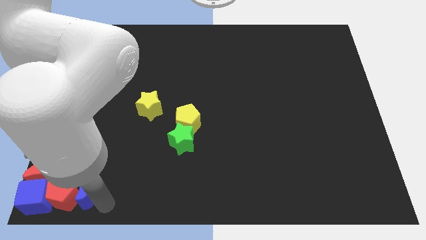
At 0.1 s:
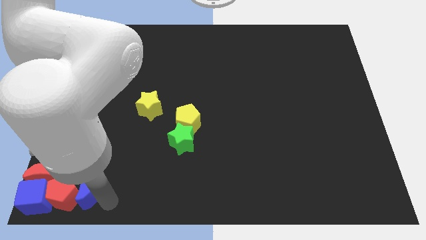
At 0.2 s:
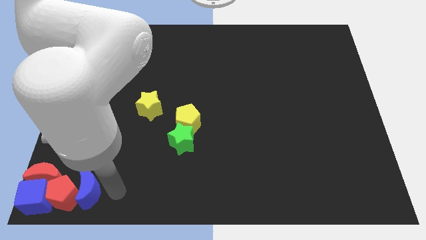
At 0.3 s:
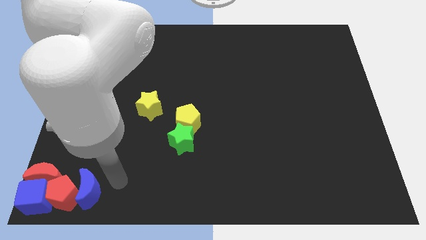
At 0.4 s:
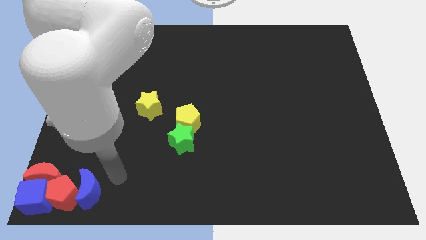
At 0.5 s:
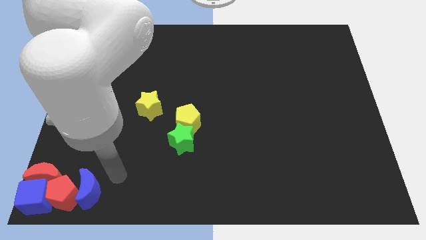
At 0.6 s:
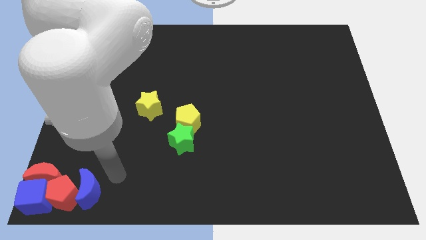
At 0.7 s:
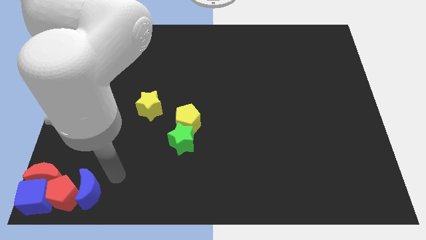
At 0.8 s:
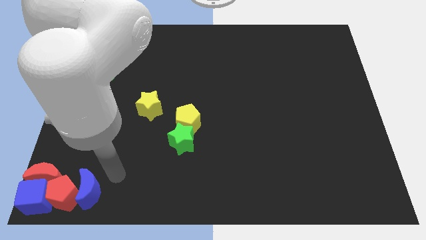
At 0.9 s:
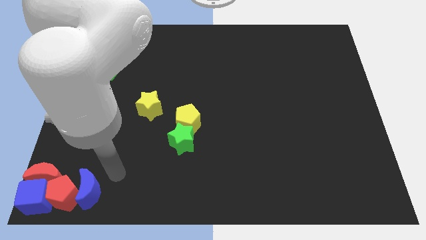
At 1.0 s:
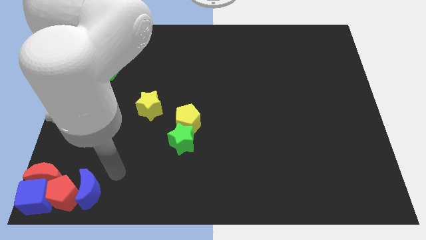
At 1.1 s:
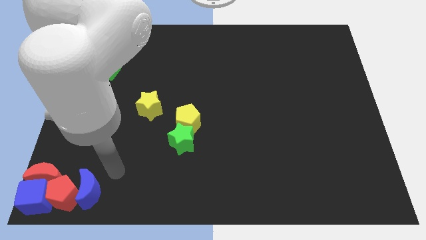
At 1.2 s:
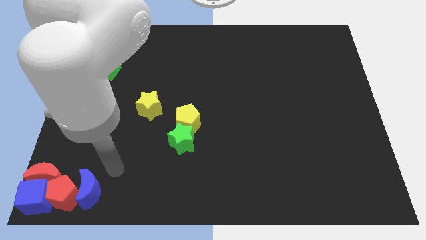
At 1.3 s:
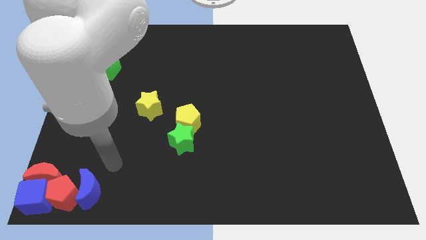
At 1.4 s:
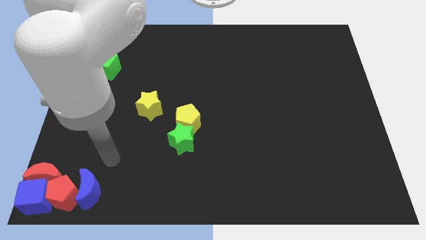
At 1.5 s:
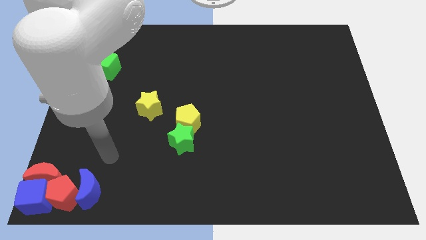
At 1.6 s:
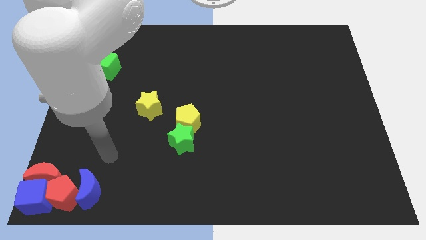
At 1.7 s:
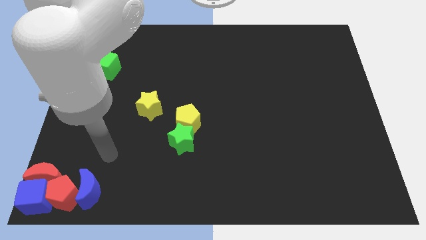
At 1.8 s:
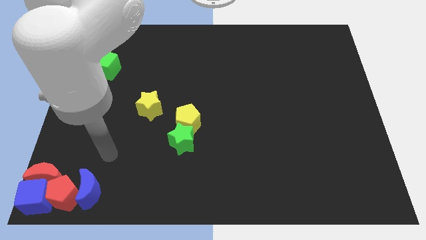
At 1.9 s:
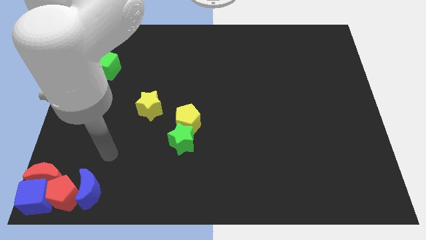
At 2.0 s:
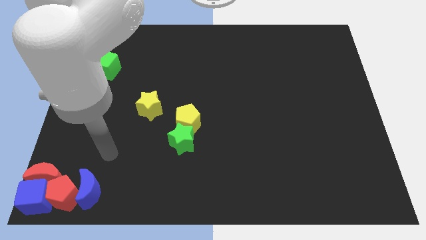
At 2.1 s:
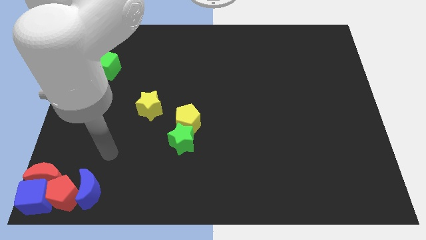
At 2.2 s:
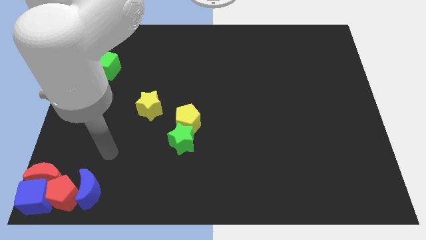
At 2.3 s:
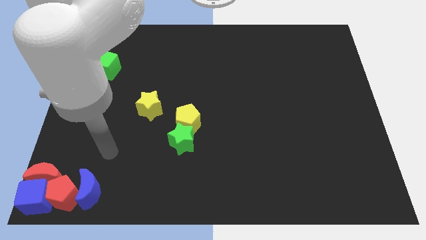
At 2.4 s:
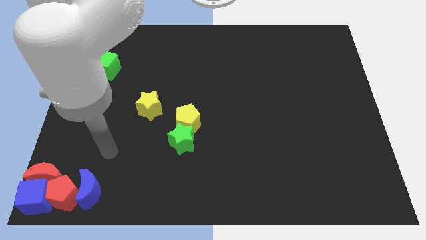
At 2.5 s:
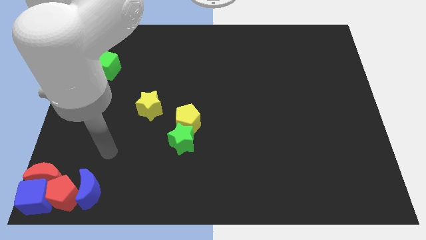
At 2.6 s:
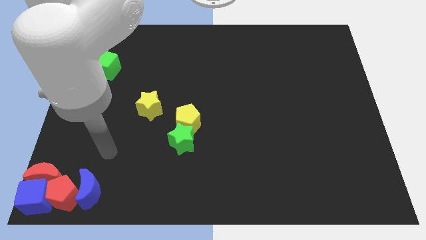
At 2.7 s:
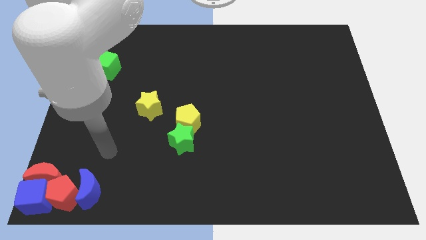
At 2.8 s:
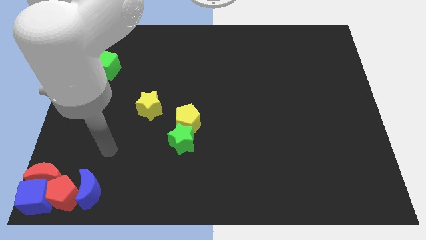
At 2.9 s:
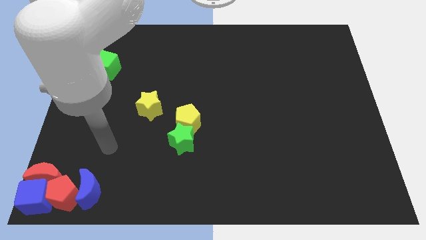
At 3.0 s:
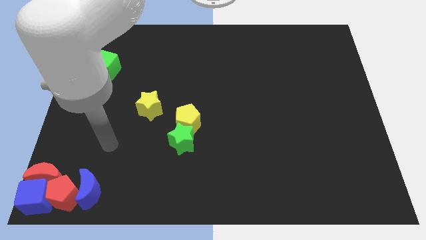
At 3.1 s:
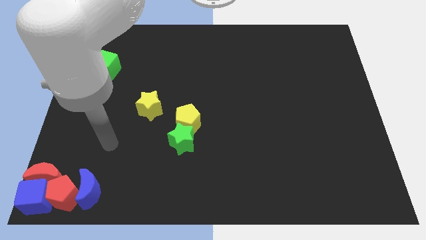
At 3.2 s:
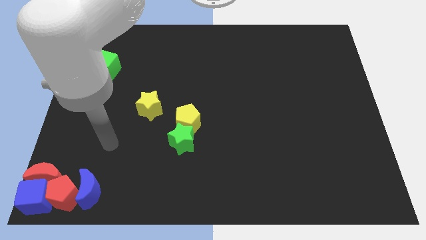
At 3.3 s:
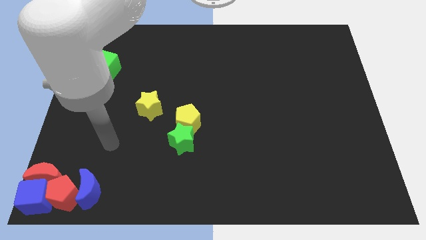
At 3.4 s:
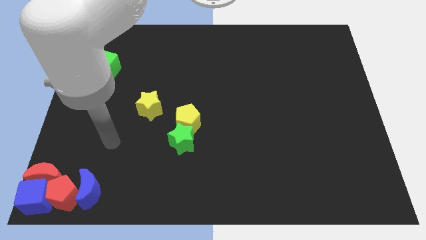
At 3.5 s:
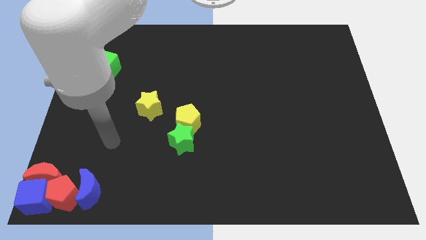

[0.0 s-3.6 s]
place arm in between yellow star and blue moon

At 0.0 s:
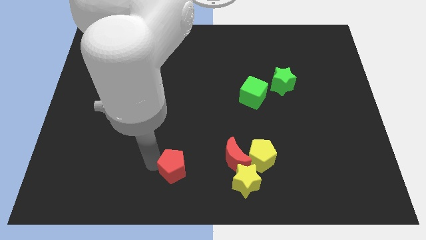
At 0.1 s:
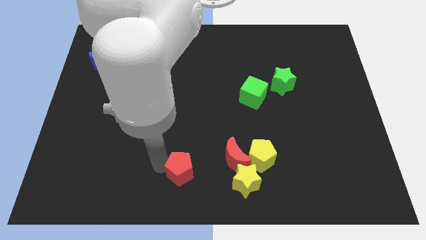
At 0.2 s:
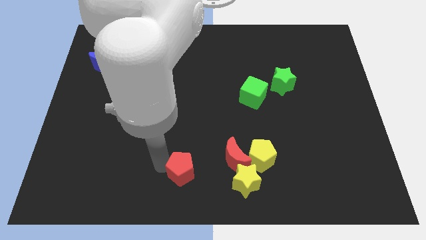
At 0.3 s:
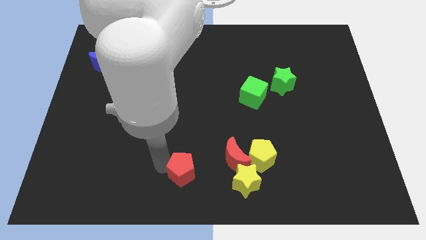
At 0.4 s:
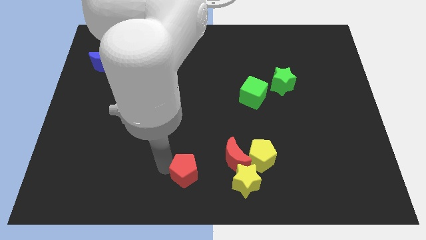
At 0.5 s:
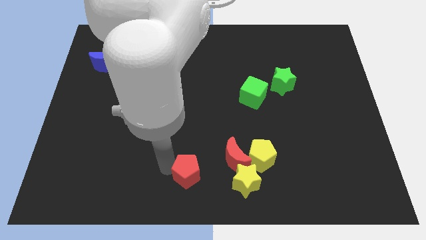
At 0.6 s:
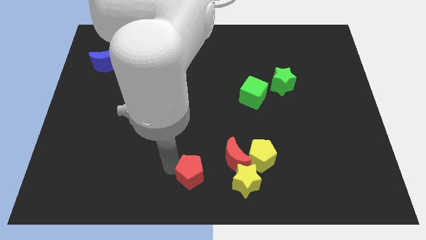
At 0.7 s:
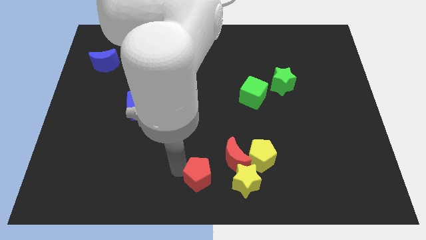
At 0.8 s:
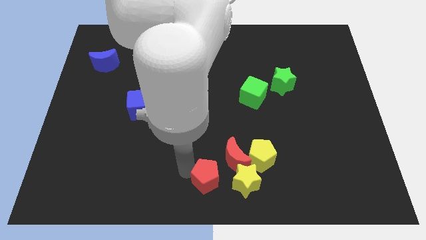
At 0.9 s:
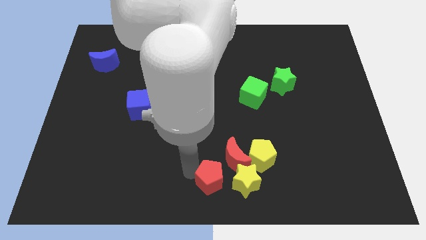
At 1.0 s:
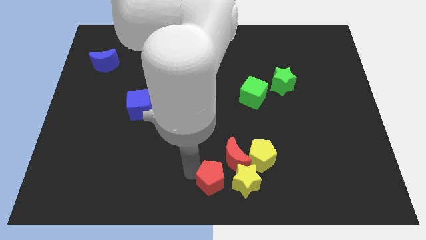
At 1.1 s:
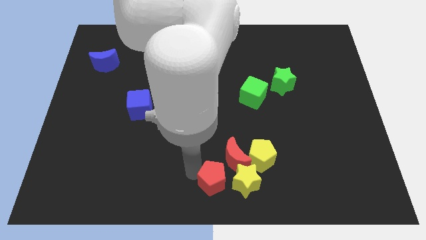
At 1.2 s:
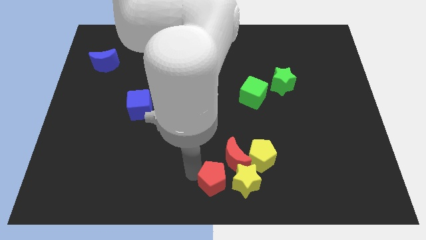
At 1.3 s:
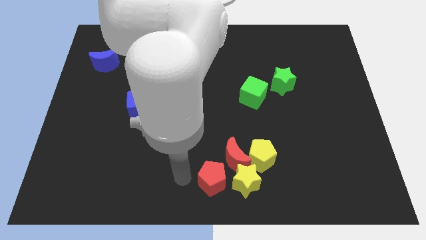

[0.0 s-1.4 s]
push the red pentagon towards the left of the yellow star

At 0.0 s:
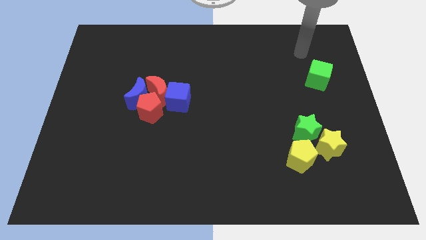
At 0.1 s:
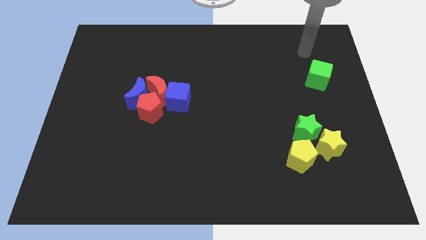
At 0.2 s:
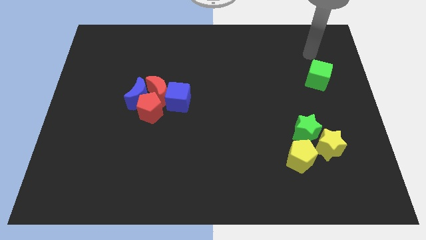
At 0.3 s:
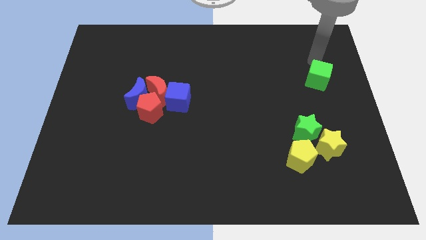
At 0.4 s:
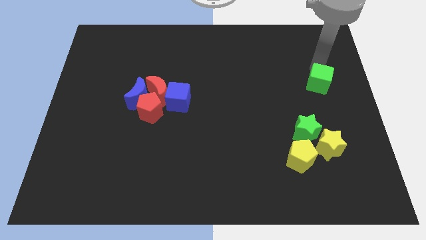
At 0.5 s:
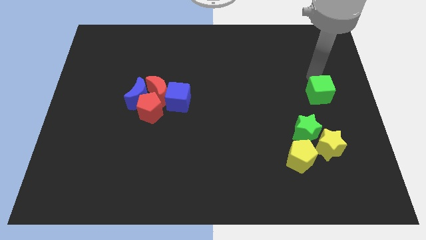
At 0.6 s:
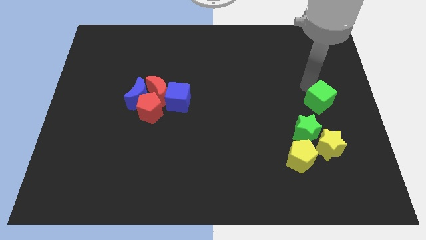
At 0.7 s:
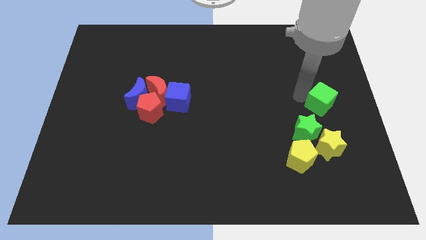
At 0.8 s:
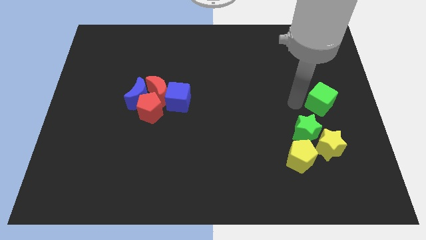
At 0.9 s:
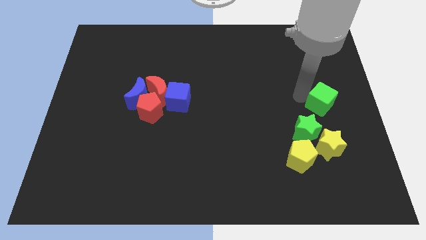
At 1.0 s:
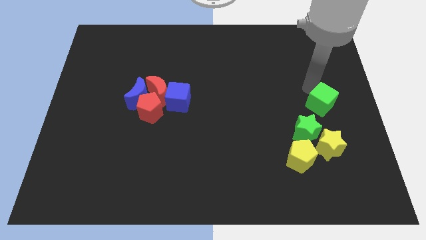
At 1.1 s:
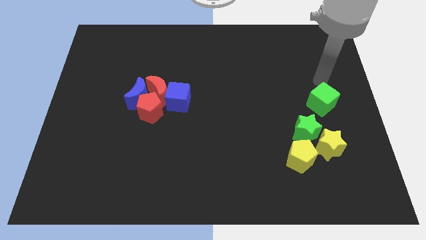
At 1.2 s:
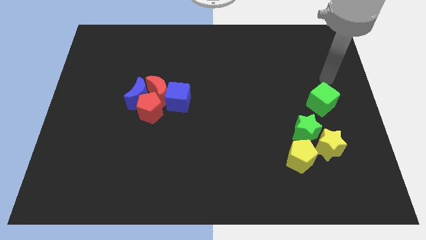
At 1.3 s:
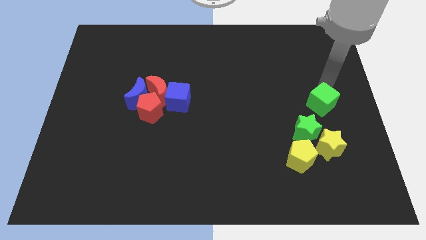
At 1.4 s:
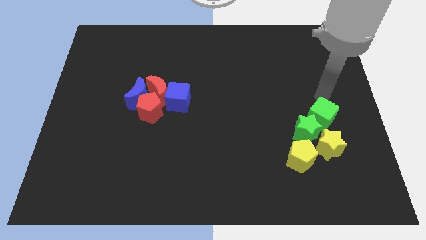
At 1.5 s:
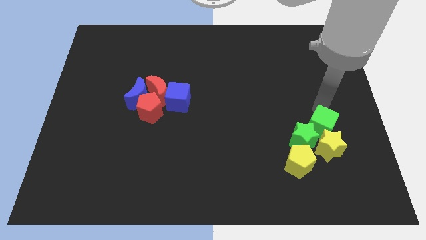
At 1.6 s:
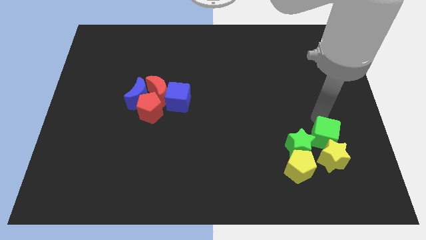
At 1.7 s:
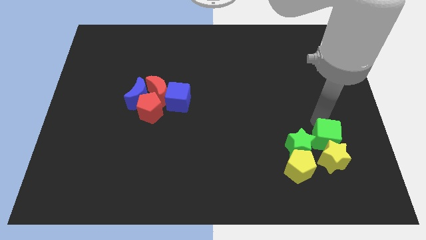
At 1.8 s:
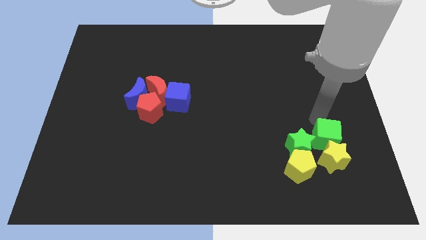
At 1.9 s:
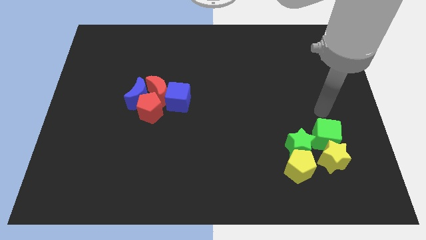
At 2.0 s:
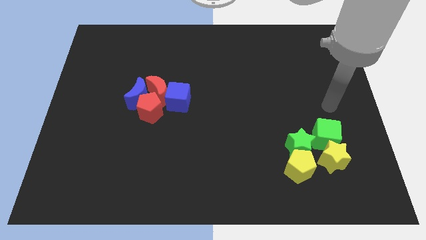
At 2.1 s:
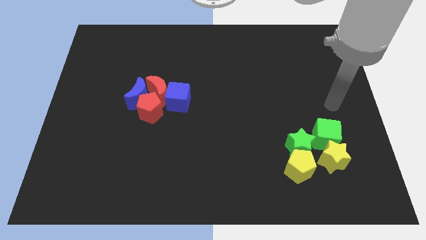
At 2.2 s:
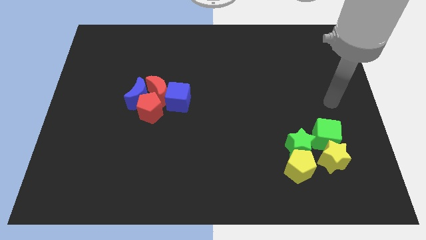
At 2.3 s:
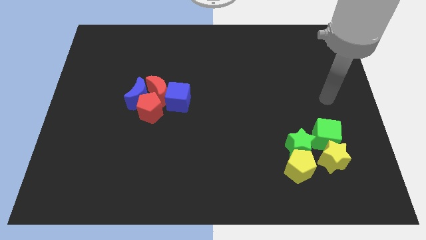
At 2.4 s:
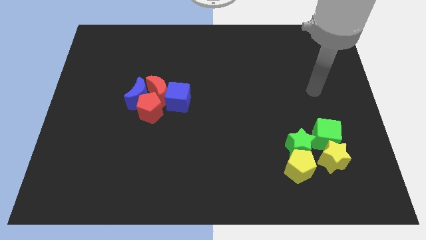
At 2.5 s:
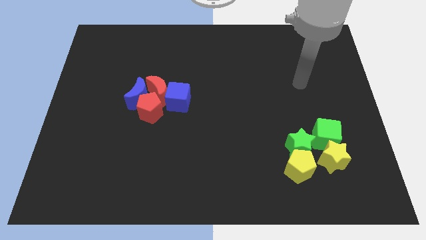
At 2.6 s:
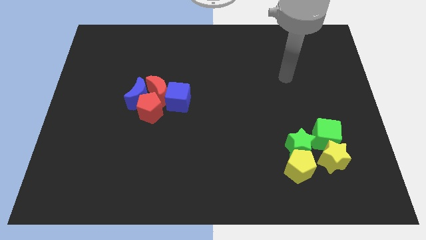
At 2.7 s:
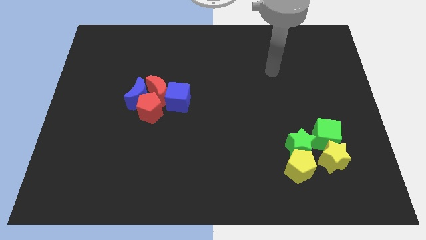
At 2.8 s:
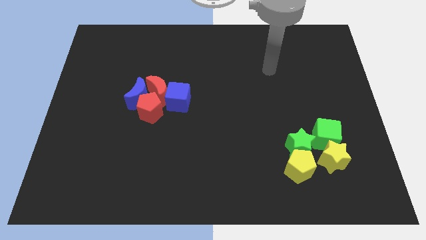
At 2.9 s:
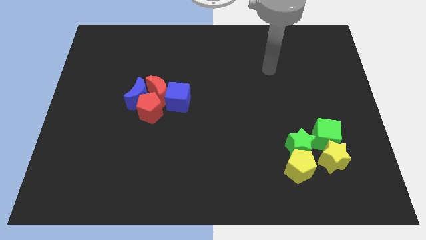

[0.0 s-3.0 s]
move the green cube right beside the green star

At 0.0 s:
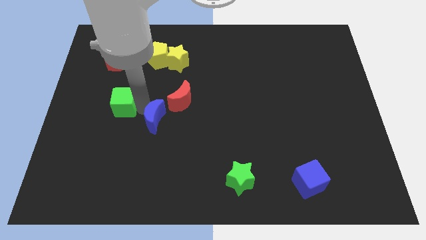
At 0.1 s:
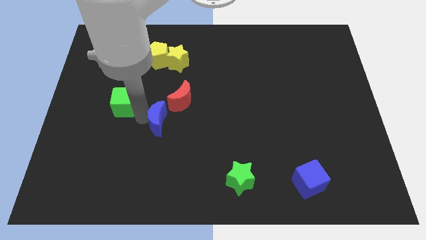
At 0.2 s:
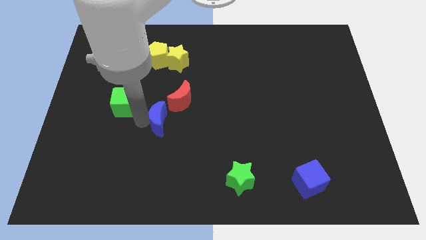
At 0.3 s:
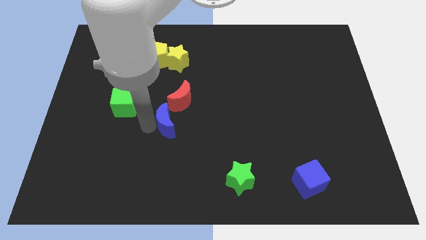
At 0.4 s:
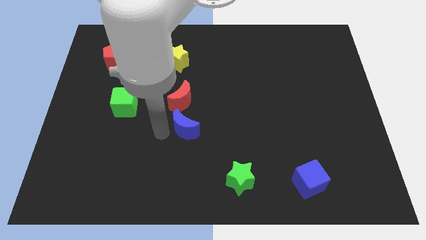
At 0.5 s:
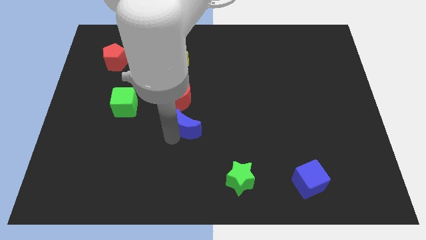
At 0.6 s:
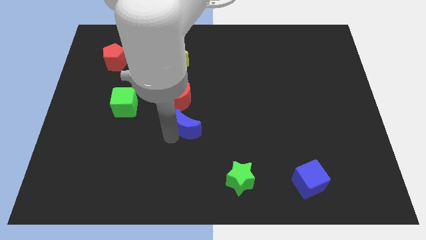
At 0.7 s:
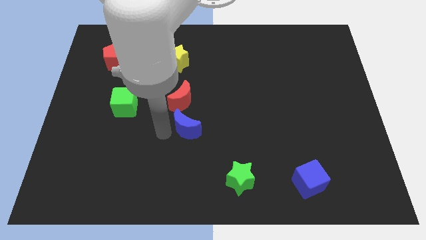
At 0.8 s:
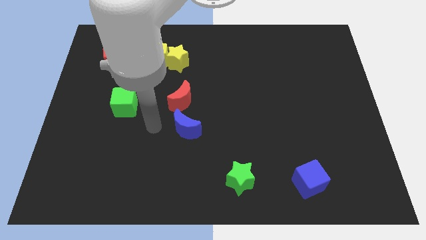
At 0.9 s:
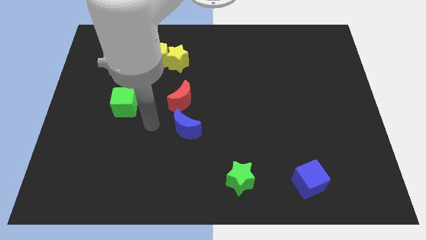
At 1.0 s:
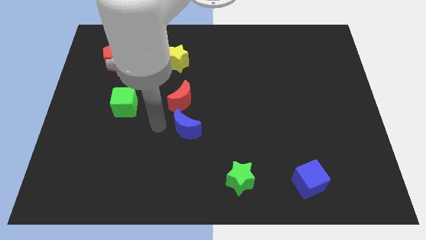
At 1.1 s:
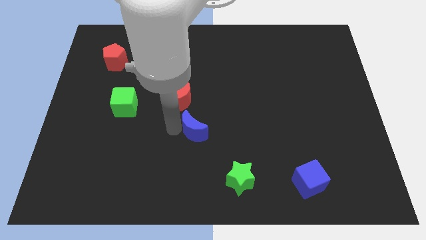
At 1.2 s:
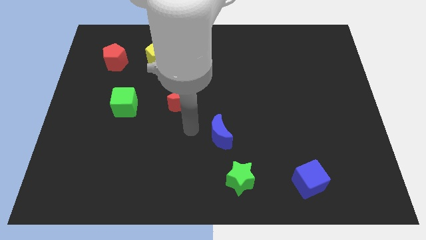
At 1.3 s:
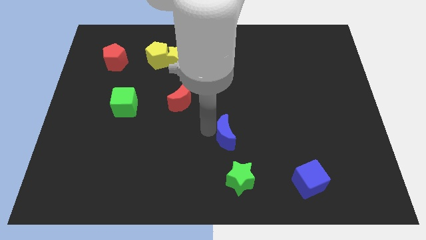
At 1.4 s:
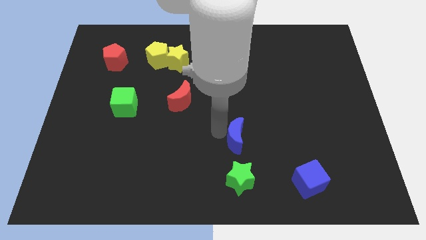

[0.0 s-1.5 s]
push the blue crescent to the top side of the green star
